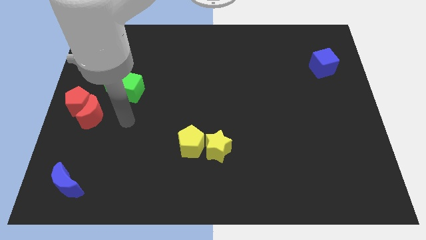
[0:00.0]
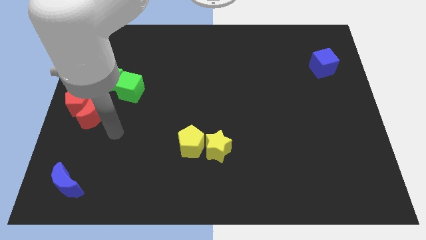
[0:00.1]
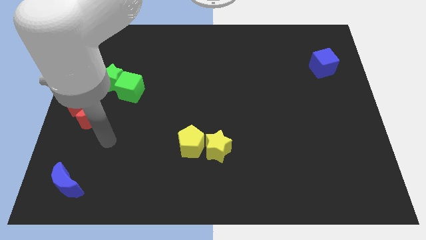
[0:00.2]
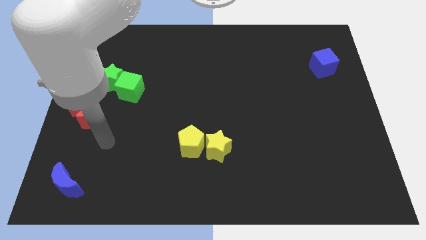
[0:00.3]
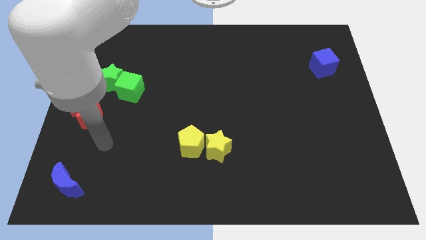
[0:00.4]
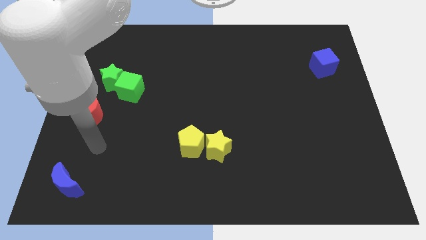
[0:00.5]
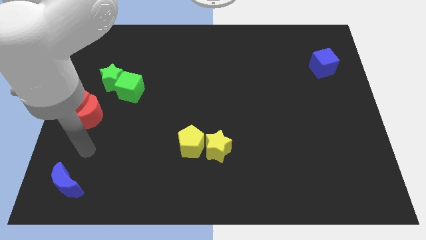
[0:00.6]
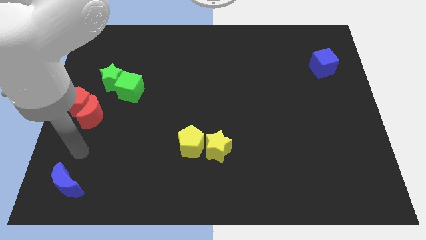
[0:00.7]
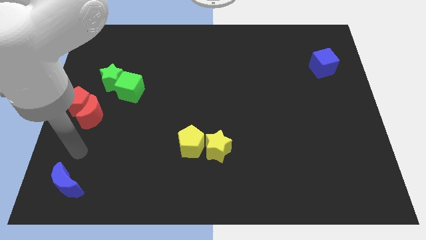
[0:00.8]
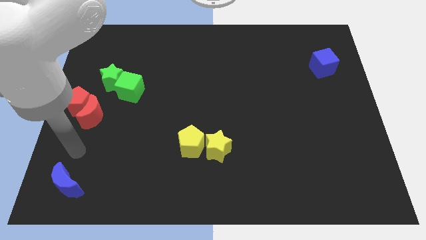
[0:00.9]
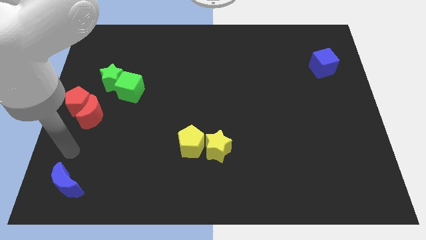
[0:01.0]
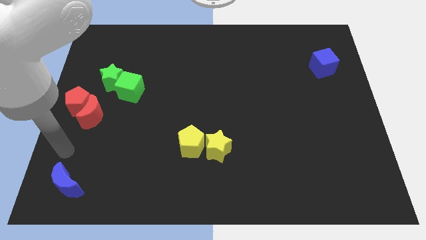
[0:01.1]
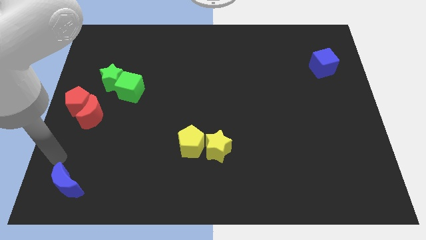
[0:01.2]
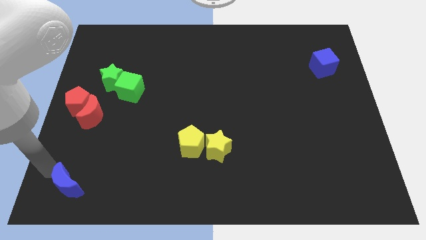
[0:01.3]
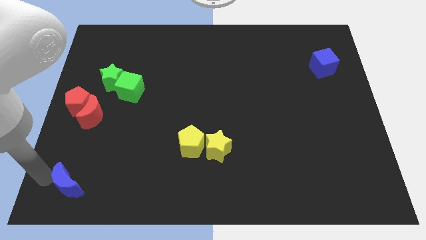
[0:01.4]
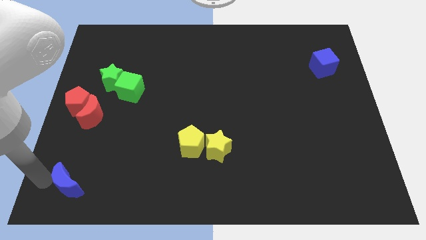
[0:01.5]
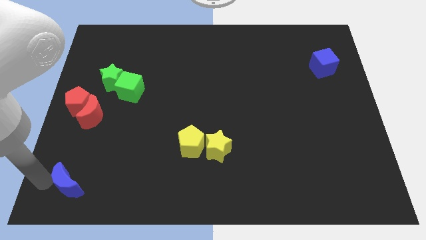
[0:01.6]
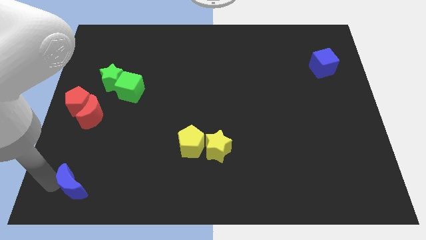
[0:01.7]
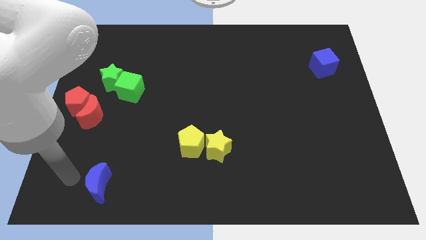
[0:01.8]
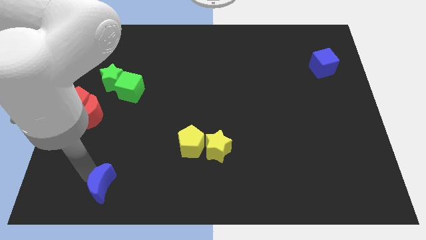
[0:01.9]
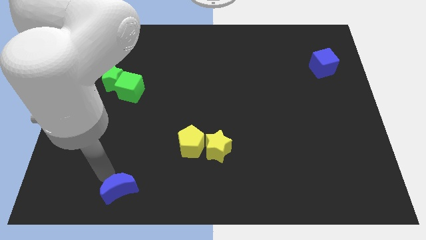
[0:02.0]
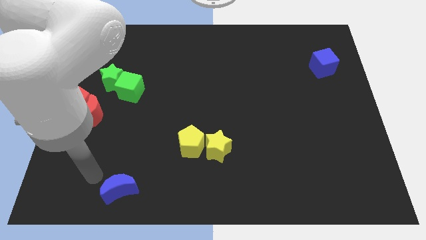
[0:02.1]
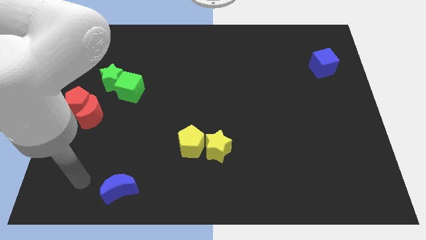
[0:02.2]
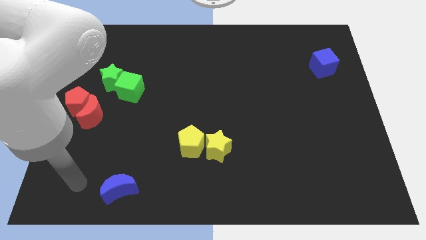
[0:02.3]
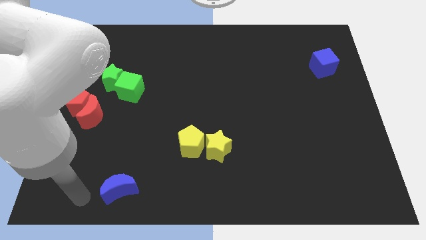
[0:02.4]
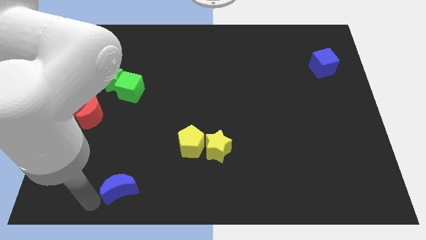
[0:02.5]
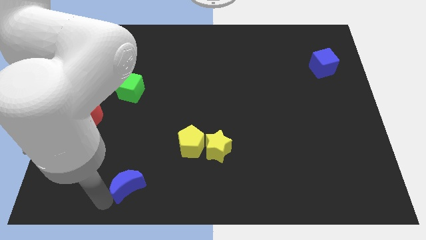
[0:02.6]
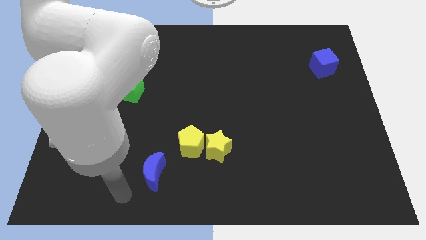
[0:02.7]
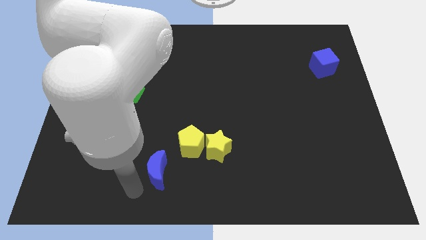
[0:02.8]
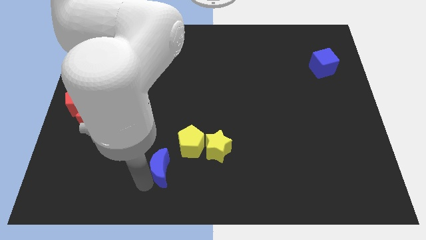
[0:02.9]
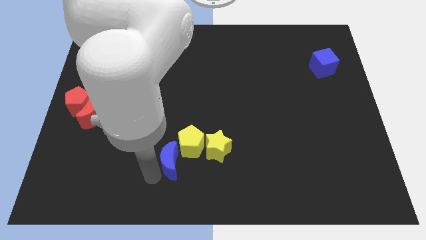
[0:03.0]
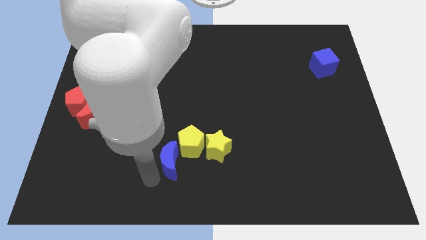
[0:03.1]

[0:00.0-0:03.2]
push the blue cube towards the yellow blocks

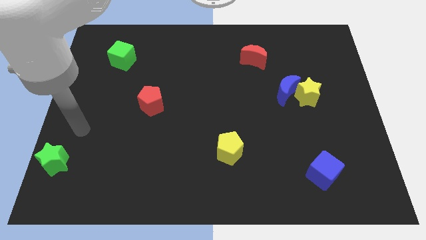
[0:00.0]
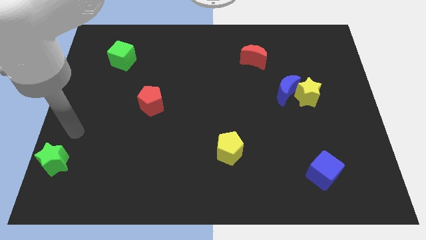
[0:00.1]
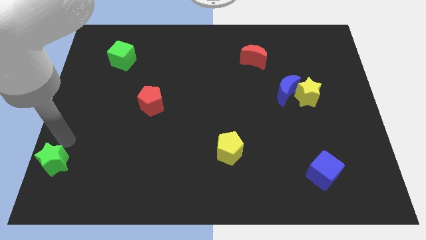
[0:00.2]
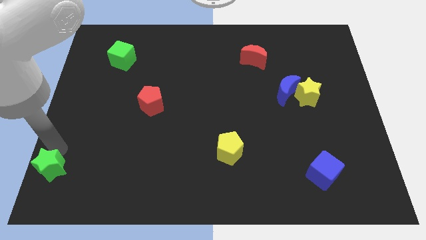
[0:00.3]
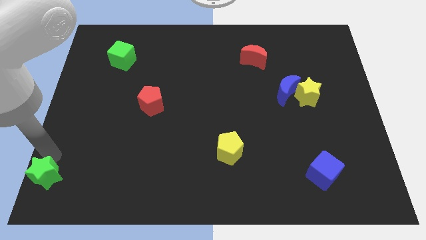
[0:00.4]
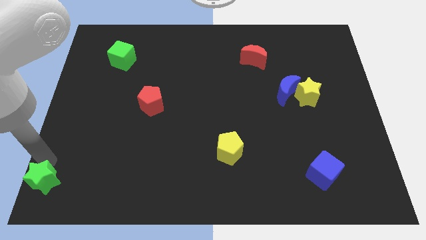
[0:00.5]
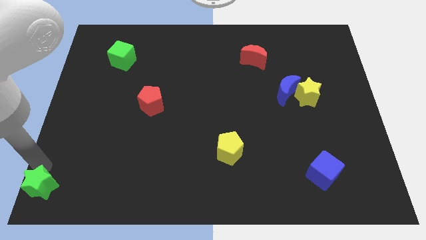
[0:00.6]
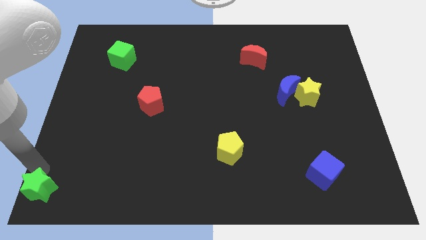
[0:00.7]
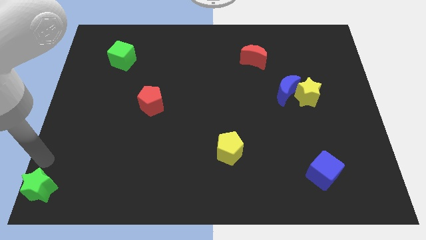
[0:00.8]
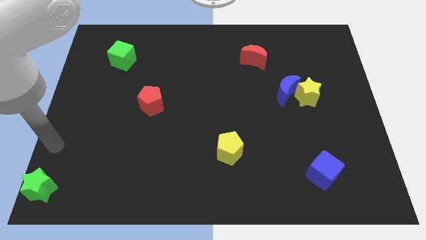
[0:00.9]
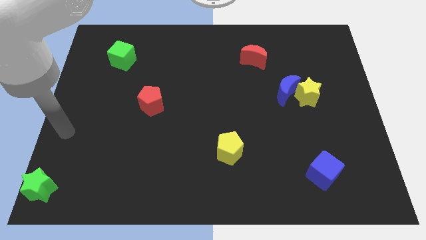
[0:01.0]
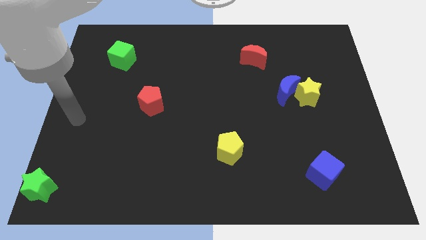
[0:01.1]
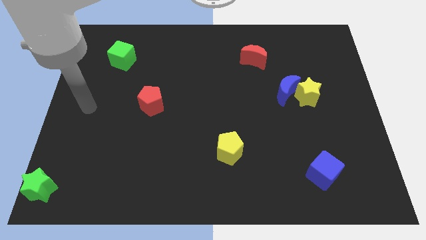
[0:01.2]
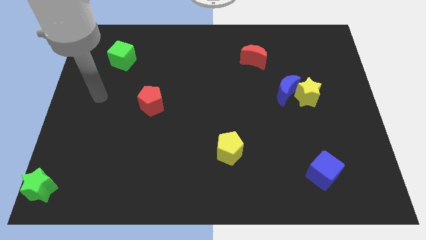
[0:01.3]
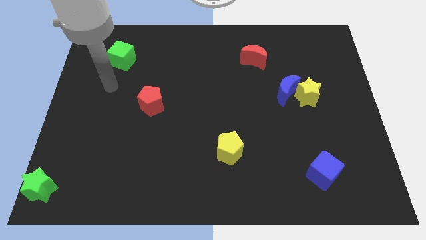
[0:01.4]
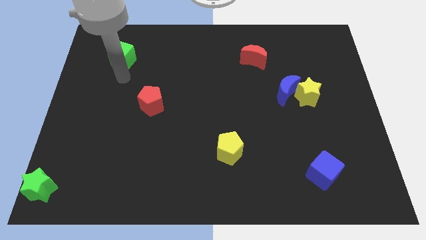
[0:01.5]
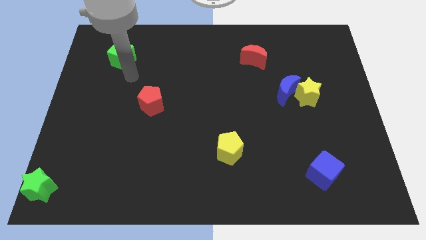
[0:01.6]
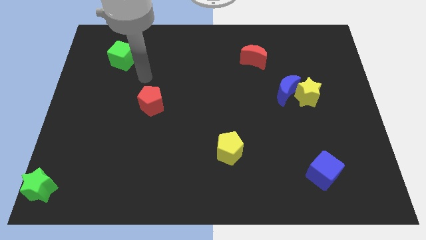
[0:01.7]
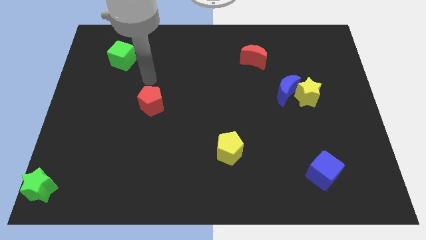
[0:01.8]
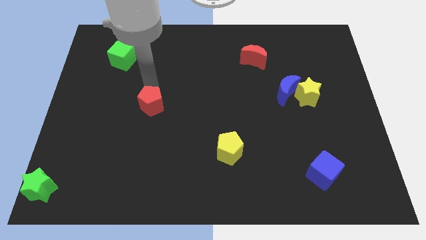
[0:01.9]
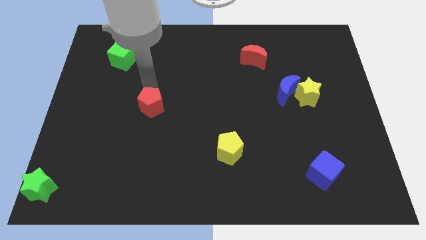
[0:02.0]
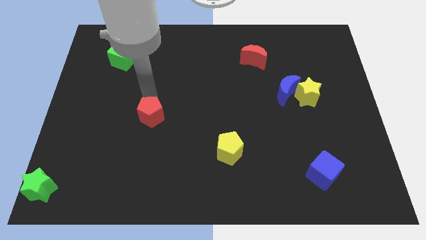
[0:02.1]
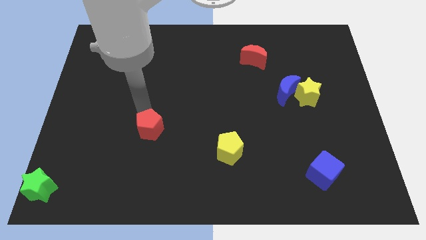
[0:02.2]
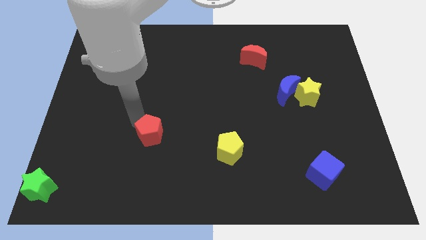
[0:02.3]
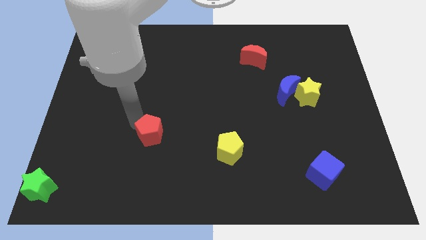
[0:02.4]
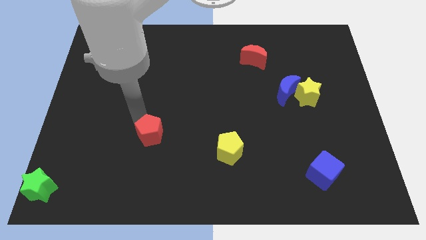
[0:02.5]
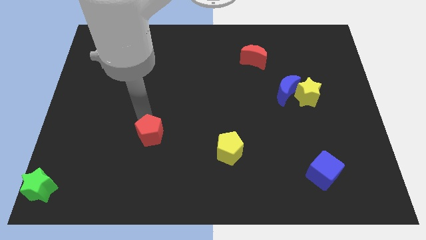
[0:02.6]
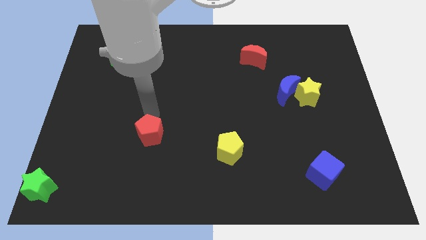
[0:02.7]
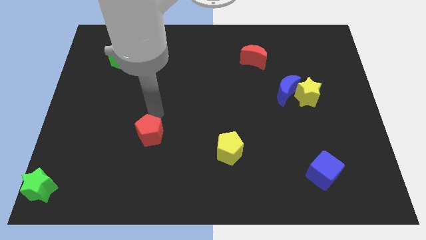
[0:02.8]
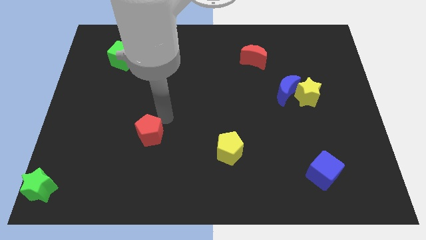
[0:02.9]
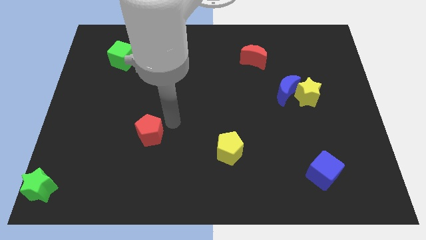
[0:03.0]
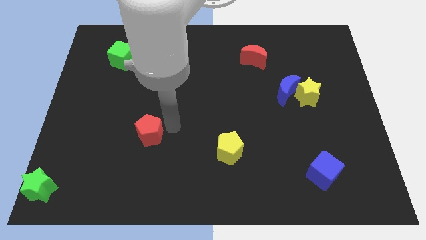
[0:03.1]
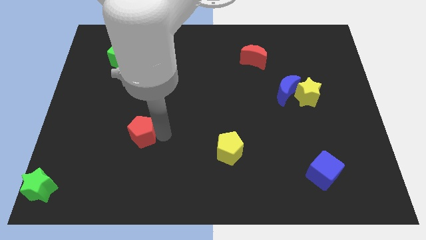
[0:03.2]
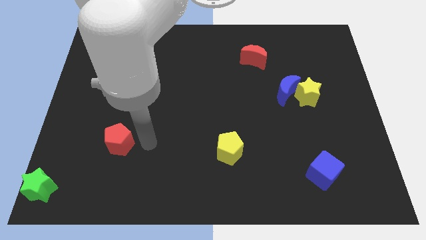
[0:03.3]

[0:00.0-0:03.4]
move the red pentagon to the left of the yellow pentagon

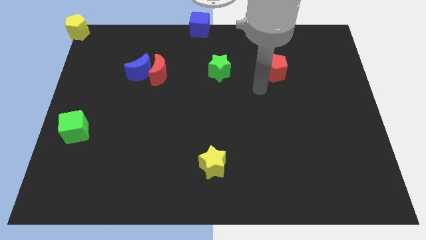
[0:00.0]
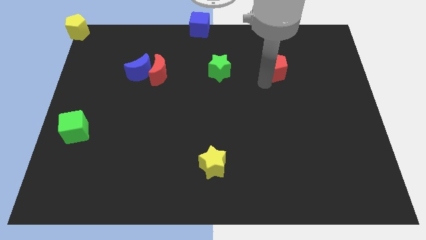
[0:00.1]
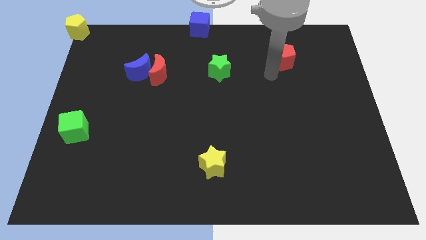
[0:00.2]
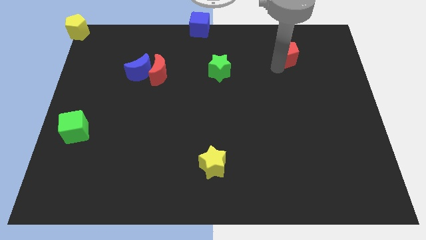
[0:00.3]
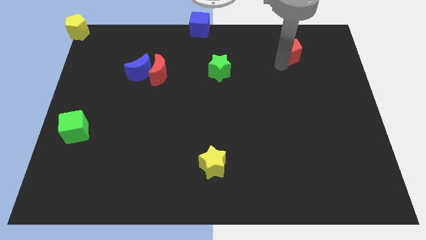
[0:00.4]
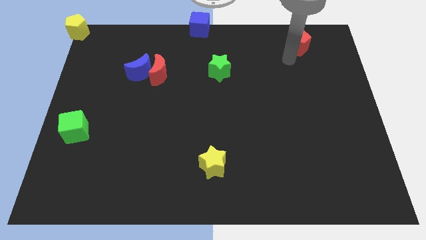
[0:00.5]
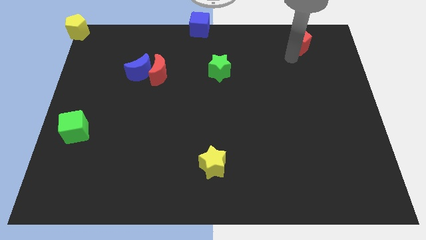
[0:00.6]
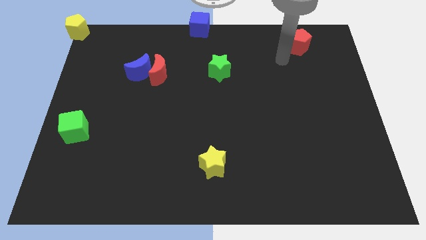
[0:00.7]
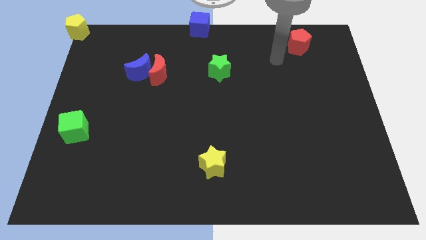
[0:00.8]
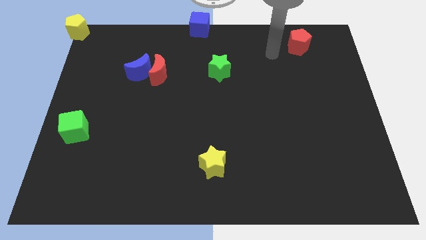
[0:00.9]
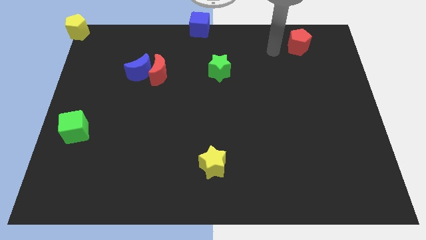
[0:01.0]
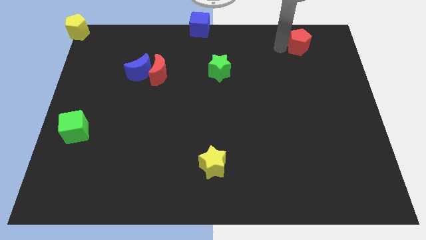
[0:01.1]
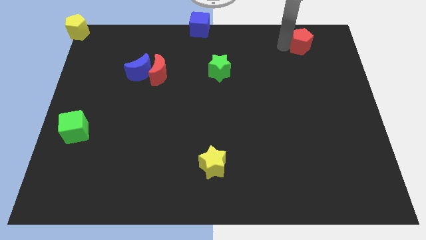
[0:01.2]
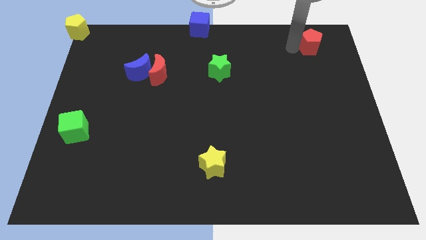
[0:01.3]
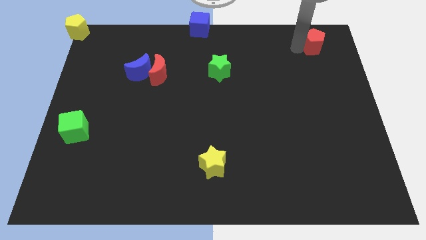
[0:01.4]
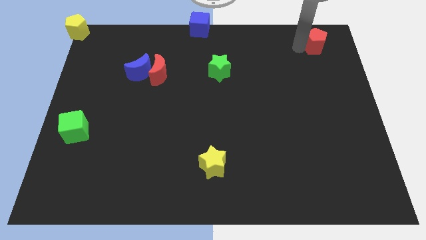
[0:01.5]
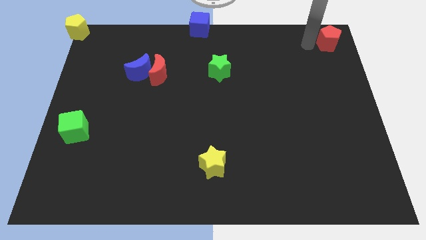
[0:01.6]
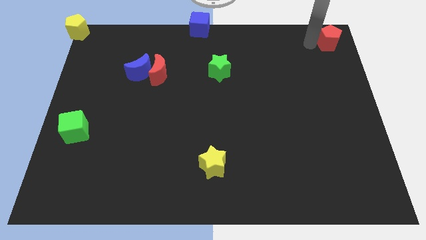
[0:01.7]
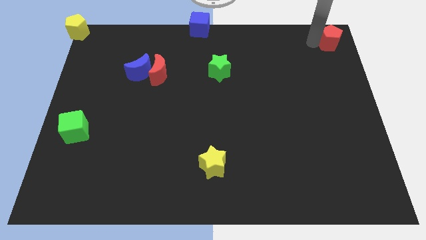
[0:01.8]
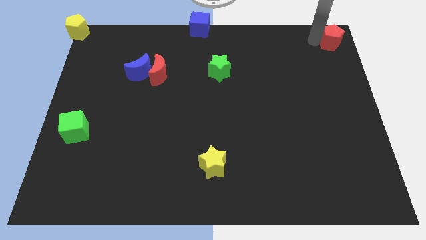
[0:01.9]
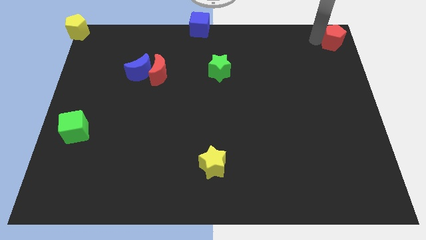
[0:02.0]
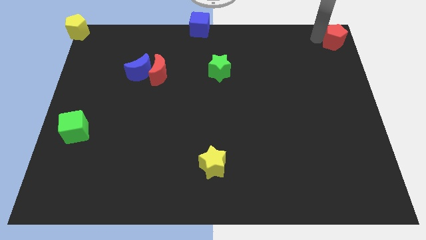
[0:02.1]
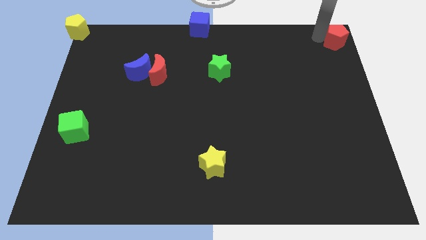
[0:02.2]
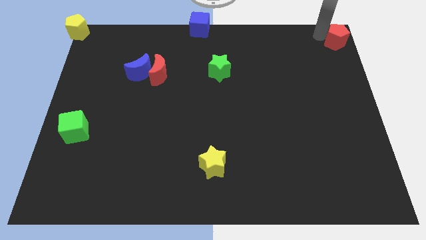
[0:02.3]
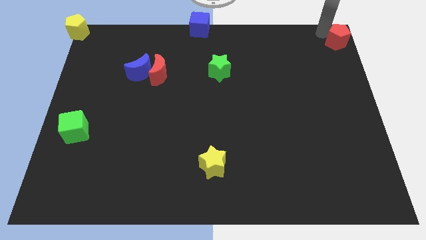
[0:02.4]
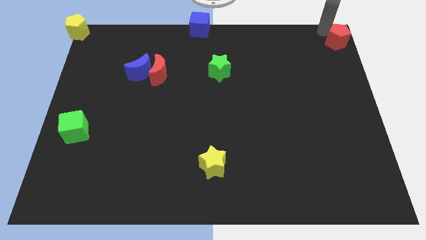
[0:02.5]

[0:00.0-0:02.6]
place the red pentagon at the top right corner of the board
